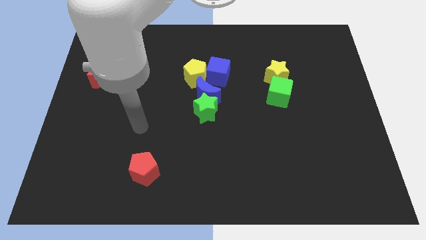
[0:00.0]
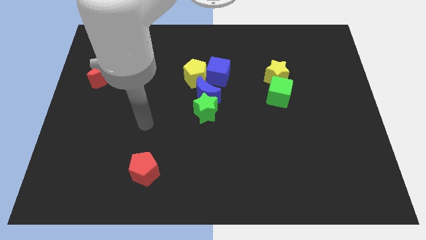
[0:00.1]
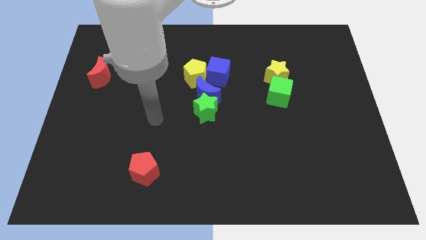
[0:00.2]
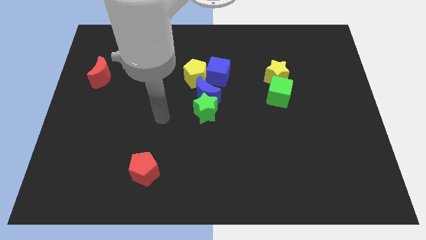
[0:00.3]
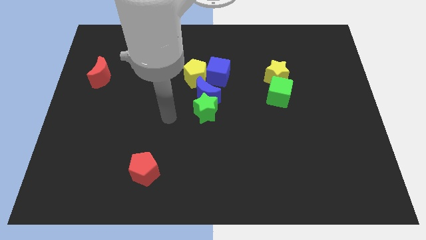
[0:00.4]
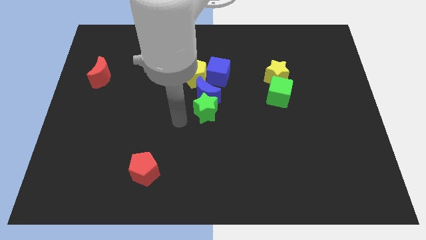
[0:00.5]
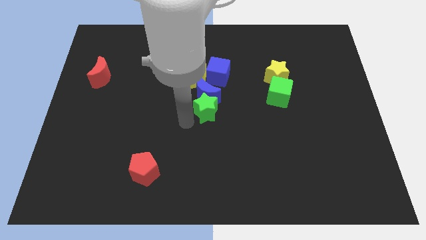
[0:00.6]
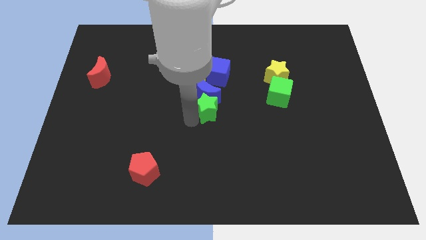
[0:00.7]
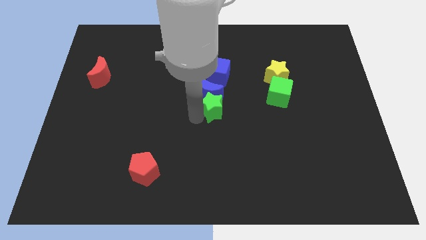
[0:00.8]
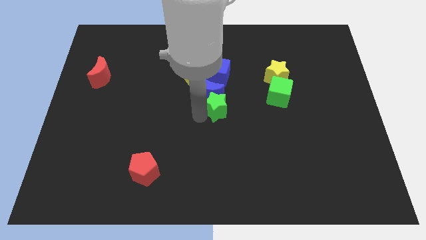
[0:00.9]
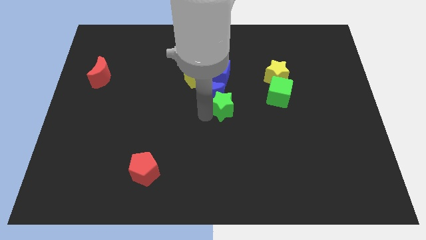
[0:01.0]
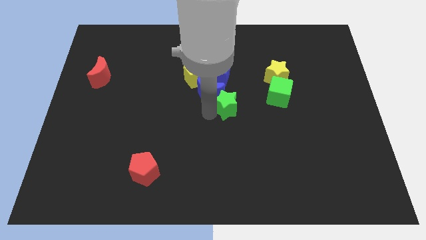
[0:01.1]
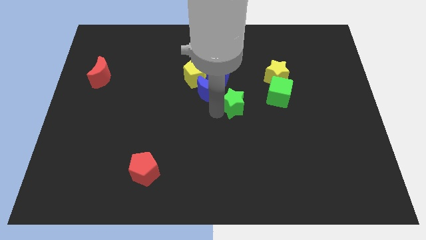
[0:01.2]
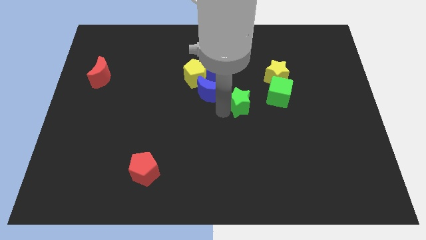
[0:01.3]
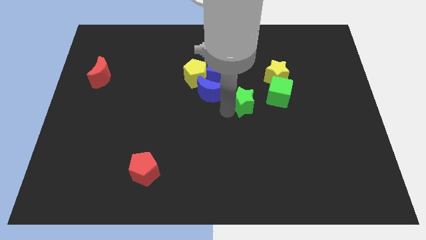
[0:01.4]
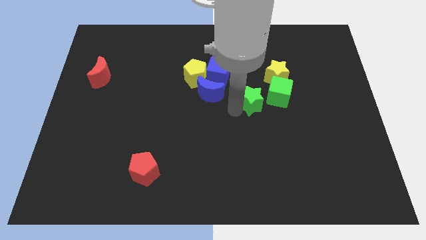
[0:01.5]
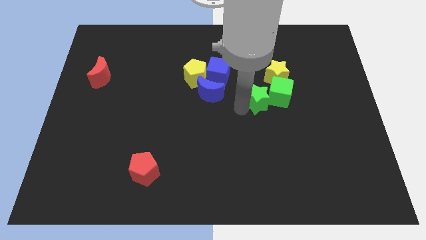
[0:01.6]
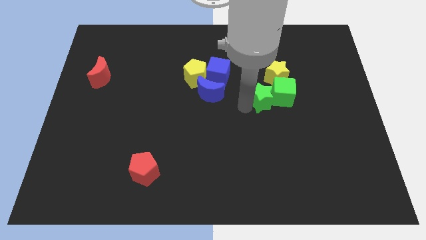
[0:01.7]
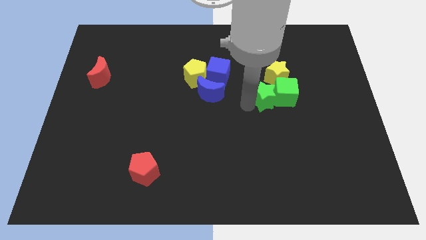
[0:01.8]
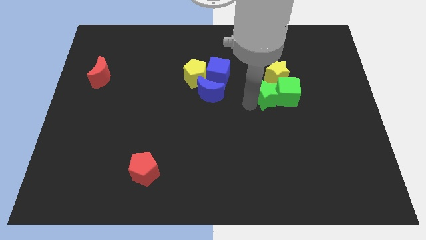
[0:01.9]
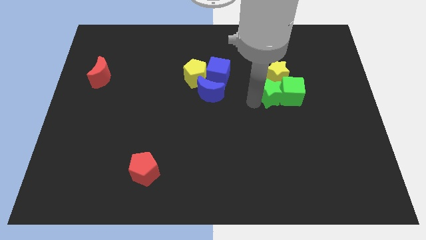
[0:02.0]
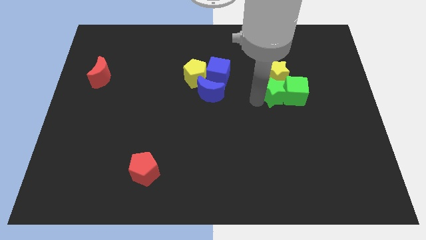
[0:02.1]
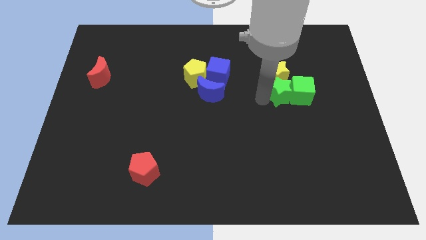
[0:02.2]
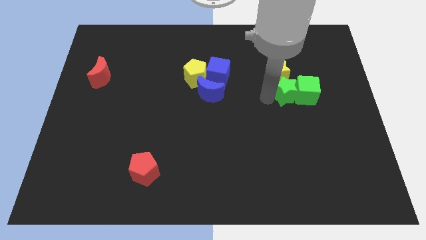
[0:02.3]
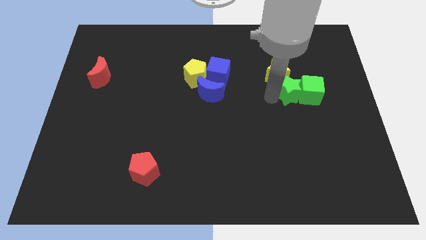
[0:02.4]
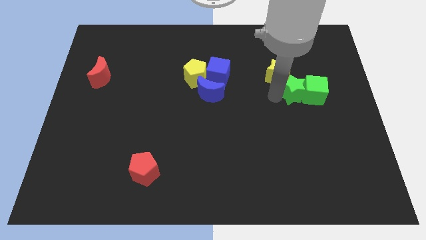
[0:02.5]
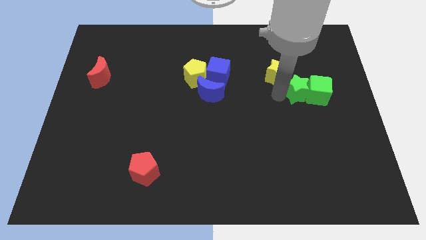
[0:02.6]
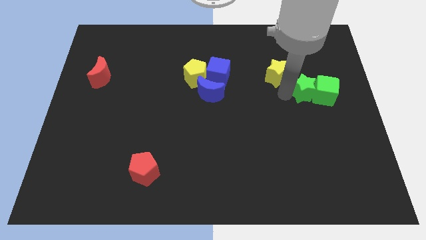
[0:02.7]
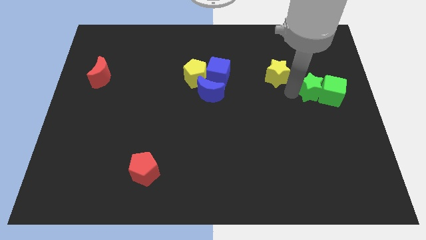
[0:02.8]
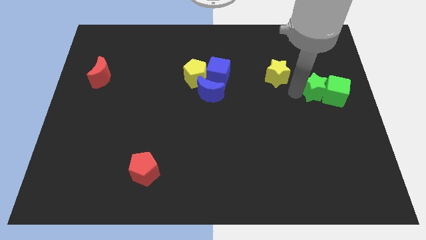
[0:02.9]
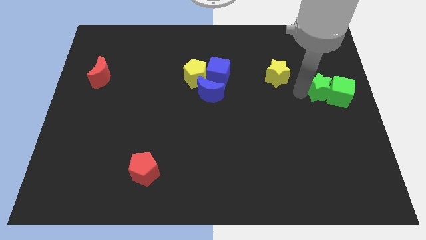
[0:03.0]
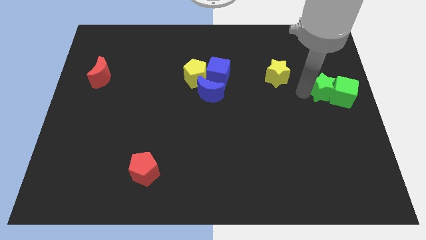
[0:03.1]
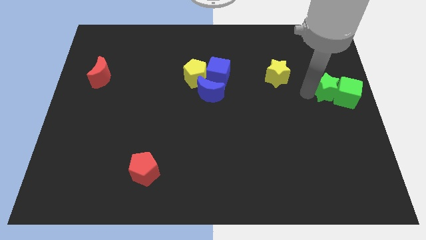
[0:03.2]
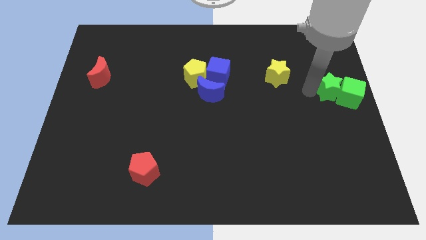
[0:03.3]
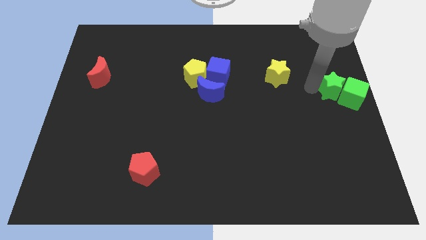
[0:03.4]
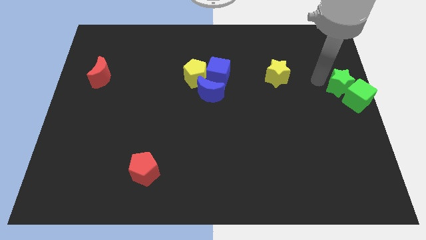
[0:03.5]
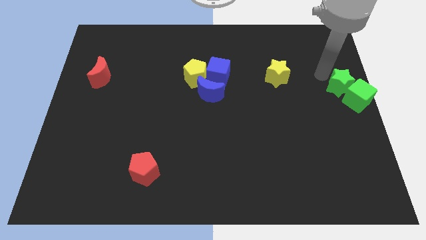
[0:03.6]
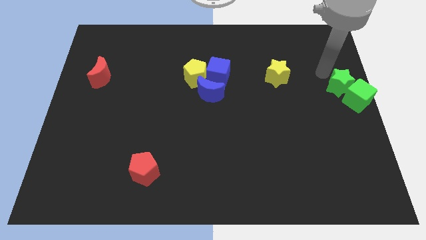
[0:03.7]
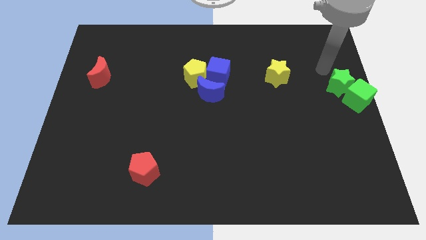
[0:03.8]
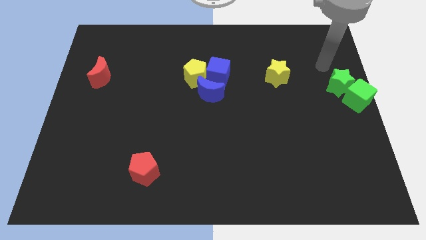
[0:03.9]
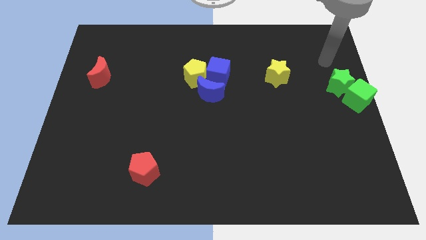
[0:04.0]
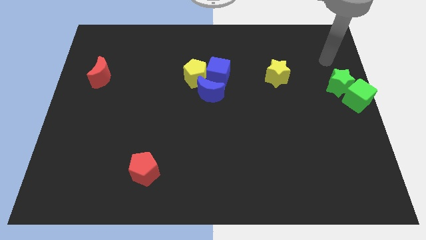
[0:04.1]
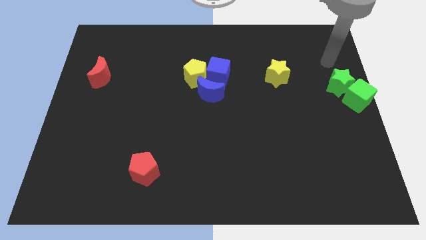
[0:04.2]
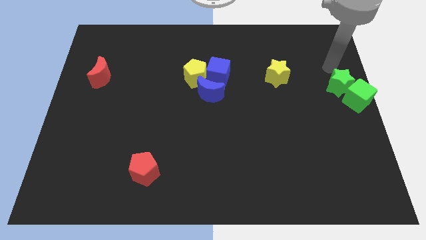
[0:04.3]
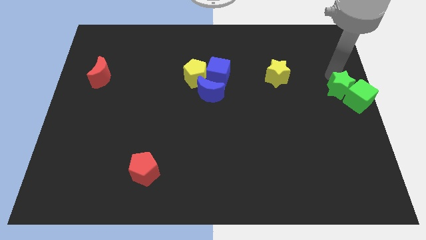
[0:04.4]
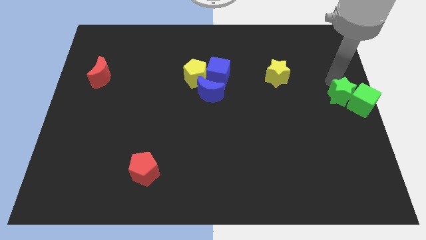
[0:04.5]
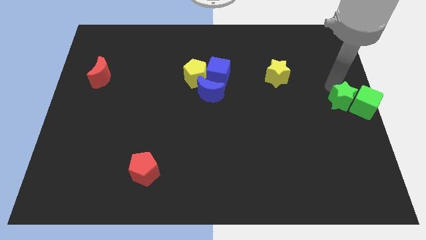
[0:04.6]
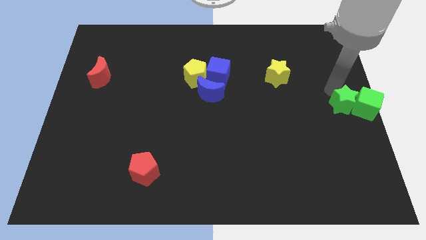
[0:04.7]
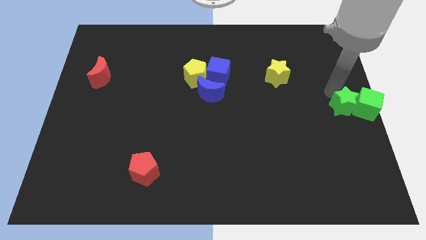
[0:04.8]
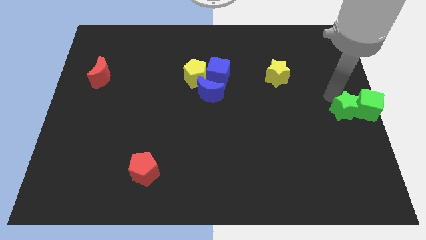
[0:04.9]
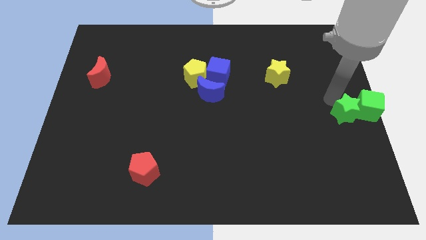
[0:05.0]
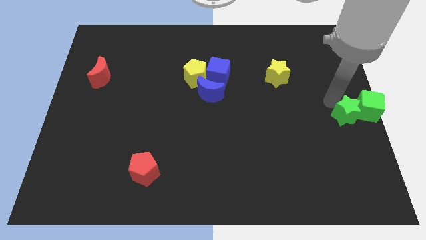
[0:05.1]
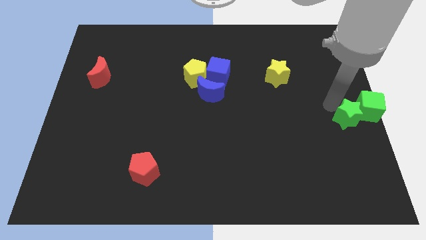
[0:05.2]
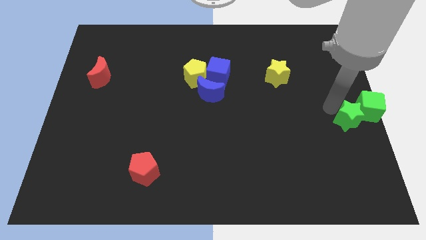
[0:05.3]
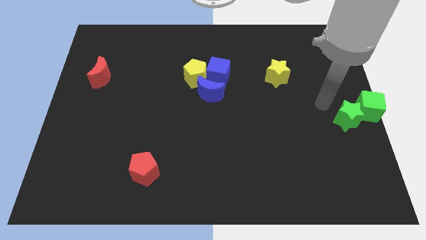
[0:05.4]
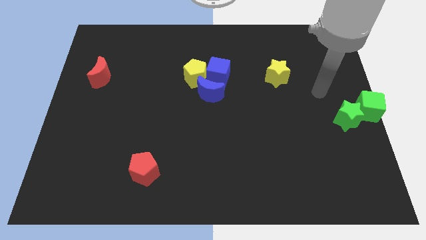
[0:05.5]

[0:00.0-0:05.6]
push the green star along with the green cube towards the right center of the board

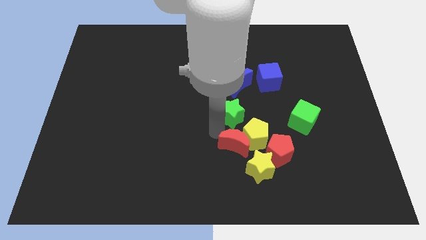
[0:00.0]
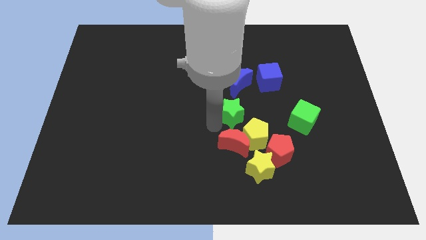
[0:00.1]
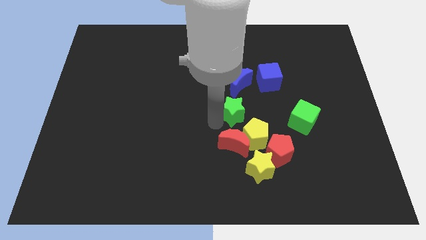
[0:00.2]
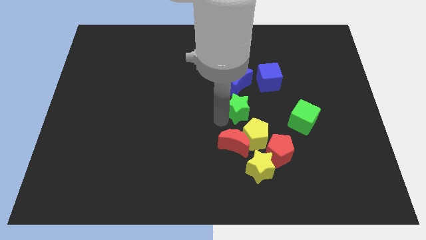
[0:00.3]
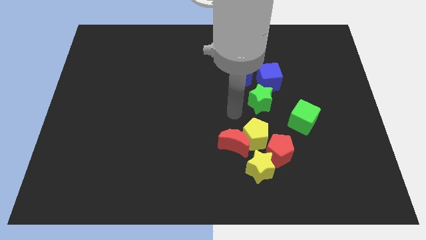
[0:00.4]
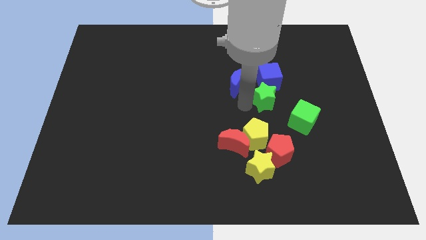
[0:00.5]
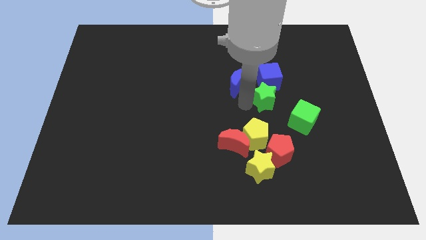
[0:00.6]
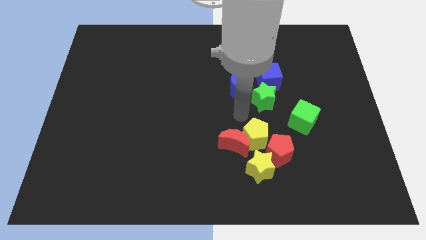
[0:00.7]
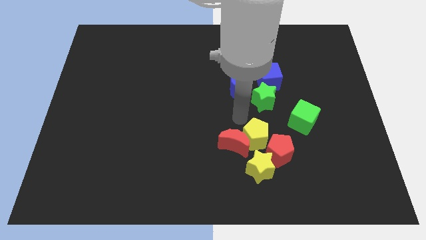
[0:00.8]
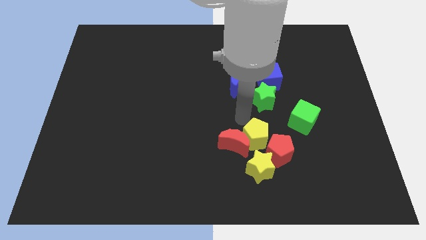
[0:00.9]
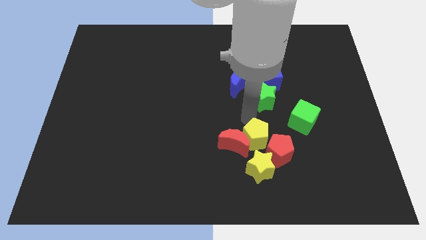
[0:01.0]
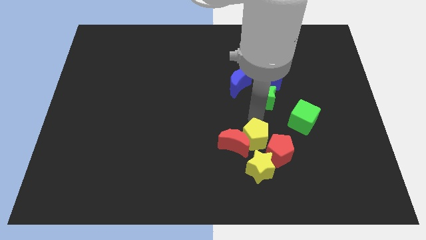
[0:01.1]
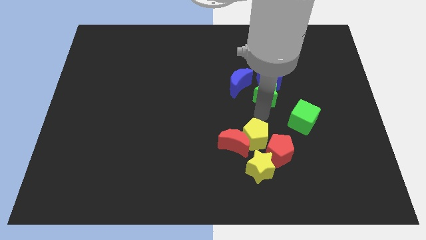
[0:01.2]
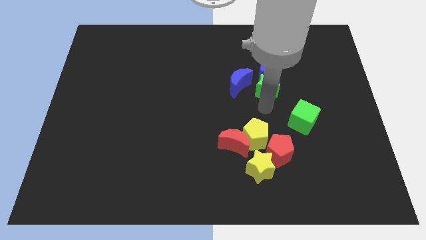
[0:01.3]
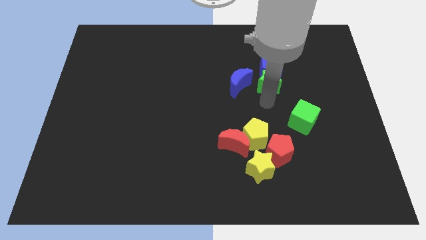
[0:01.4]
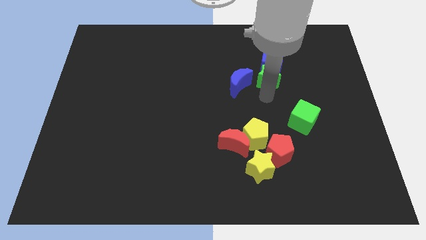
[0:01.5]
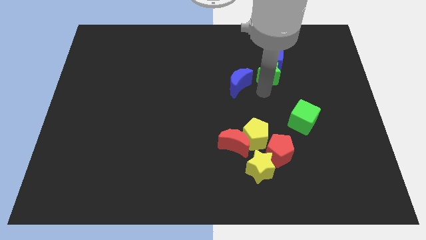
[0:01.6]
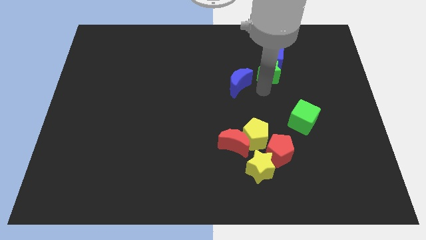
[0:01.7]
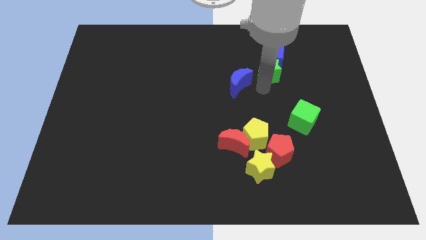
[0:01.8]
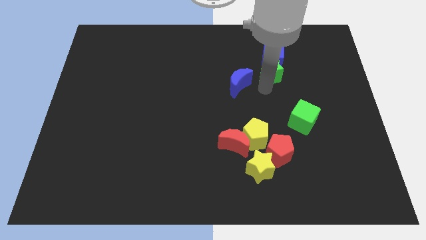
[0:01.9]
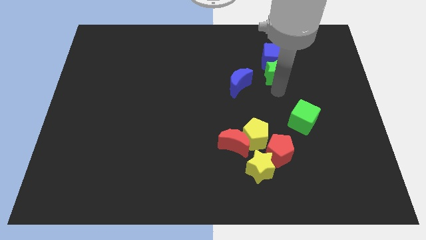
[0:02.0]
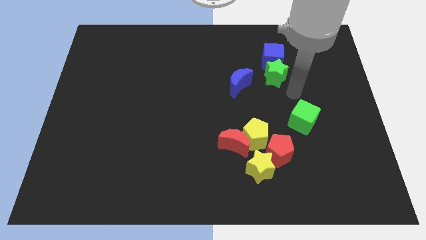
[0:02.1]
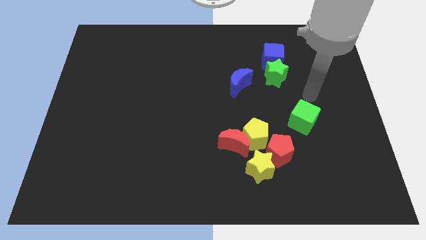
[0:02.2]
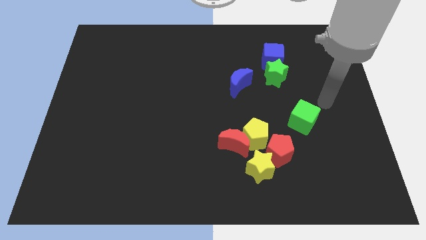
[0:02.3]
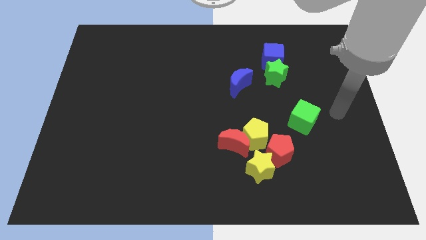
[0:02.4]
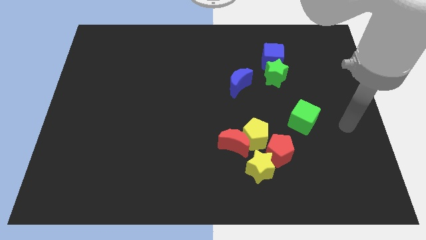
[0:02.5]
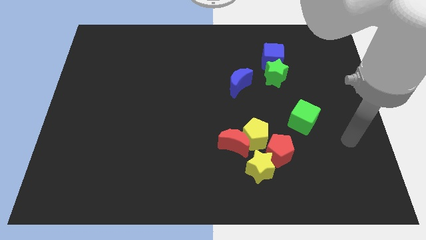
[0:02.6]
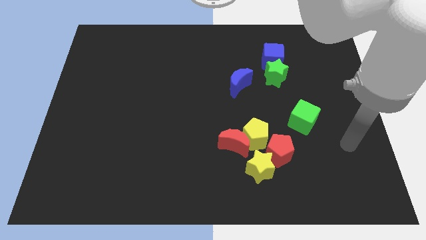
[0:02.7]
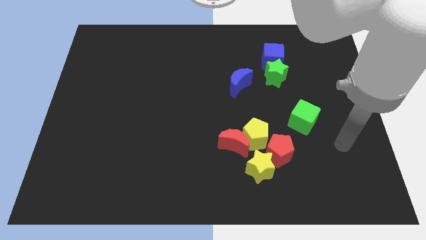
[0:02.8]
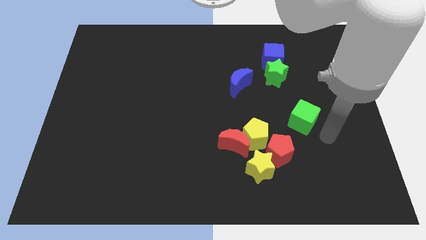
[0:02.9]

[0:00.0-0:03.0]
place the blue cube and green star to the top right side of the blue crescent

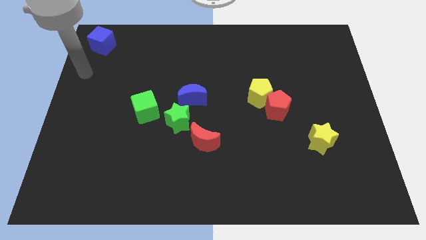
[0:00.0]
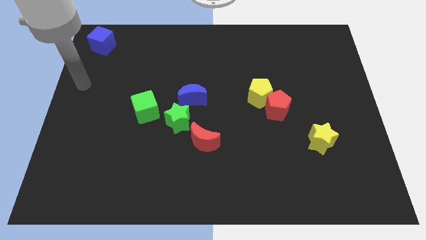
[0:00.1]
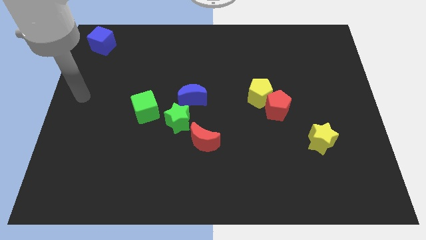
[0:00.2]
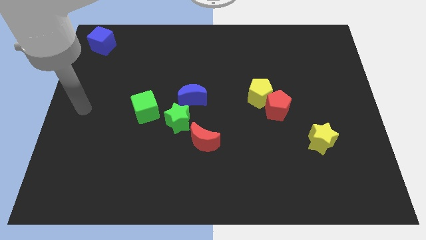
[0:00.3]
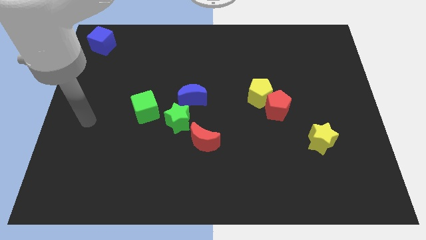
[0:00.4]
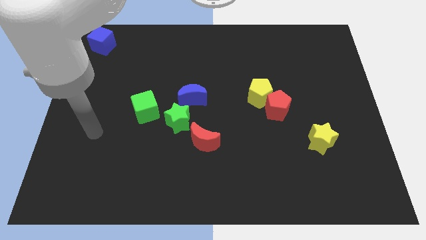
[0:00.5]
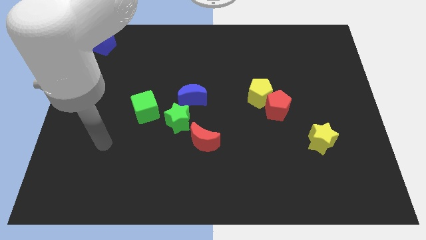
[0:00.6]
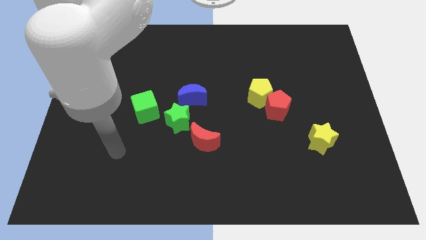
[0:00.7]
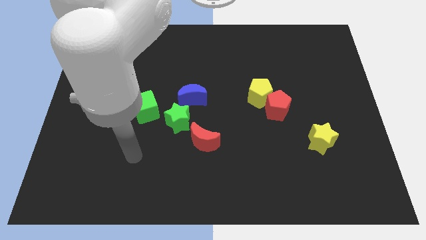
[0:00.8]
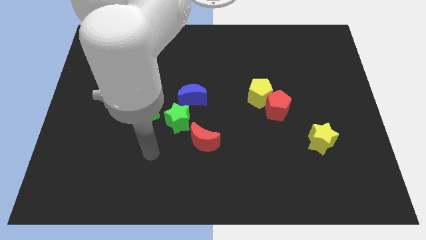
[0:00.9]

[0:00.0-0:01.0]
move your arm away from the blue cube
